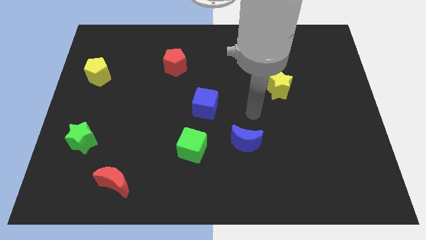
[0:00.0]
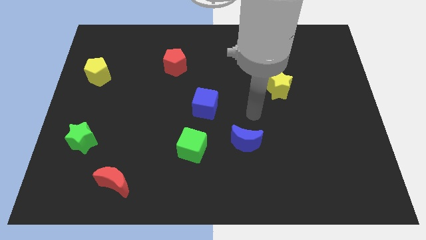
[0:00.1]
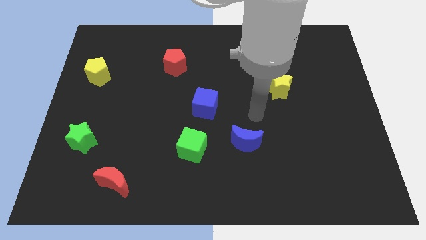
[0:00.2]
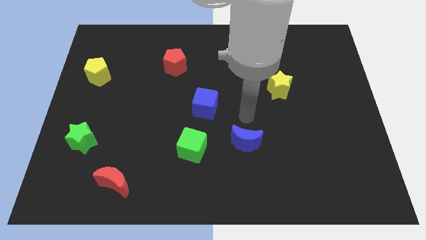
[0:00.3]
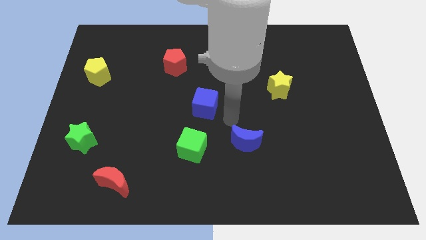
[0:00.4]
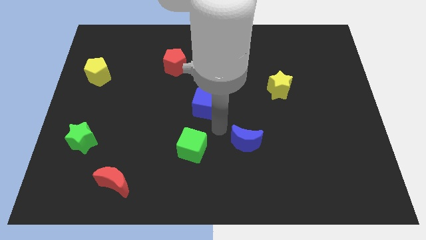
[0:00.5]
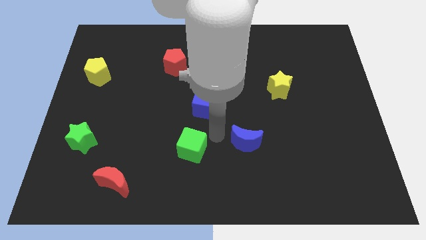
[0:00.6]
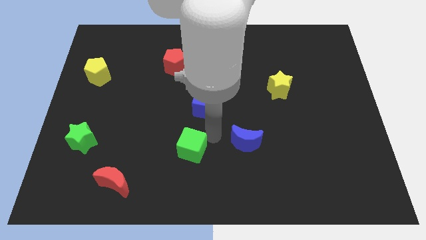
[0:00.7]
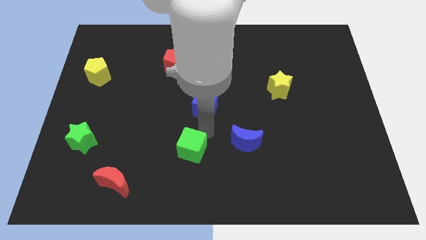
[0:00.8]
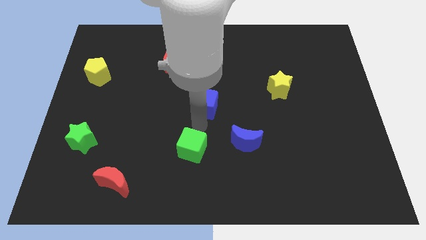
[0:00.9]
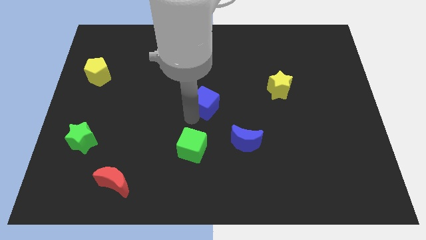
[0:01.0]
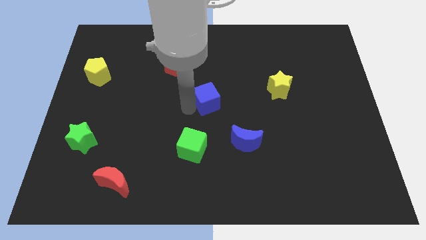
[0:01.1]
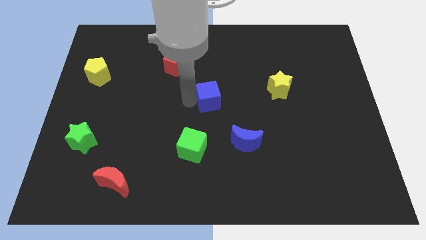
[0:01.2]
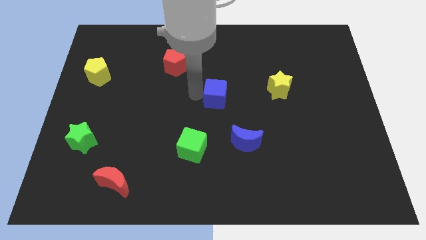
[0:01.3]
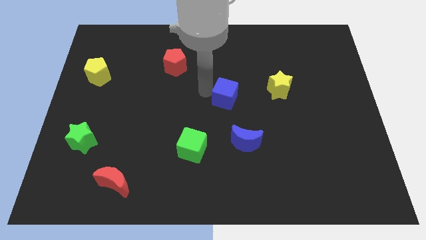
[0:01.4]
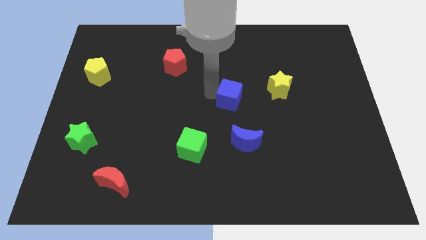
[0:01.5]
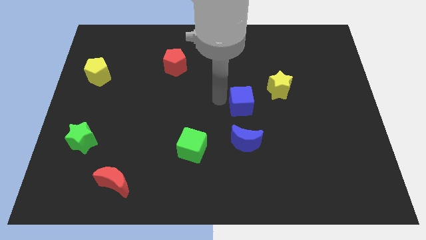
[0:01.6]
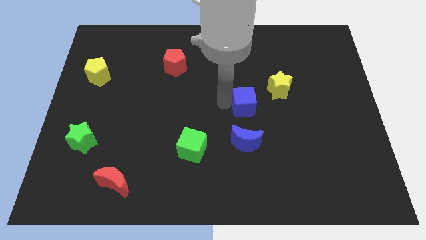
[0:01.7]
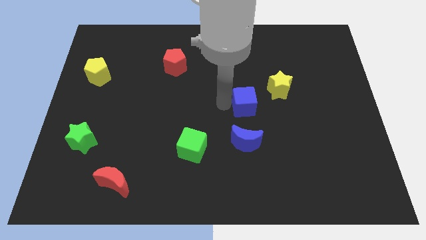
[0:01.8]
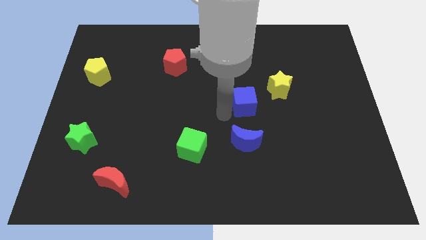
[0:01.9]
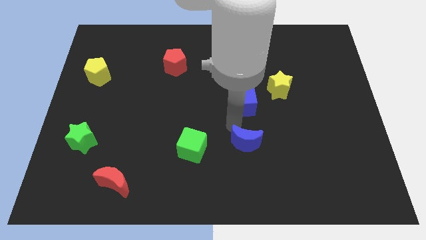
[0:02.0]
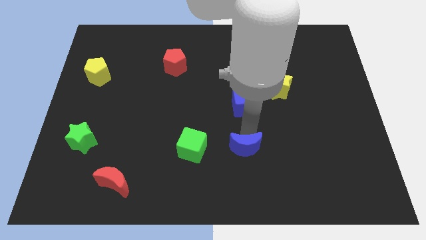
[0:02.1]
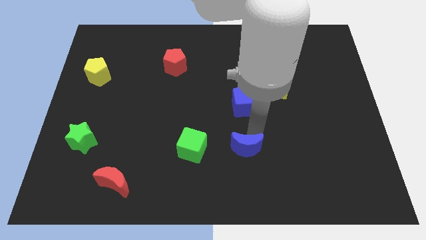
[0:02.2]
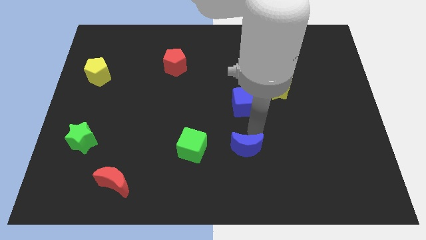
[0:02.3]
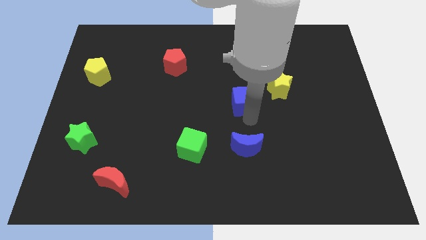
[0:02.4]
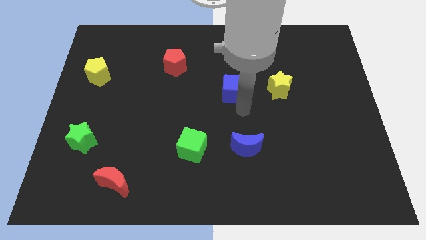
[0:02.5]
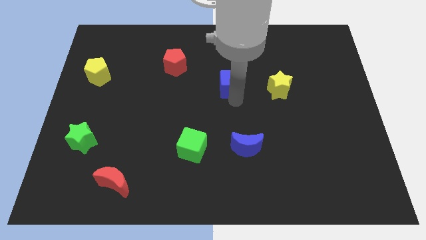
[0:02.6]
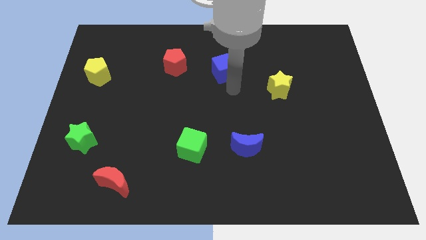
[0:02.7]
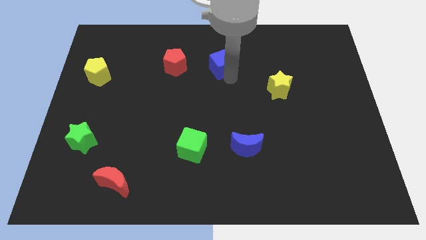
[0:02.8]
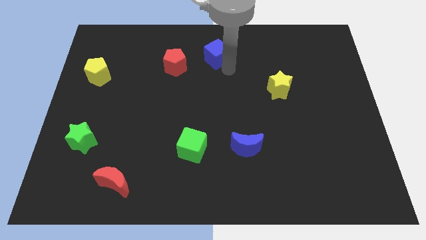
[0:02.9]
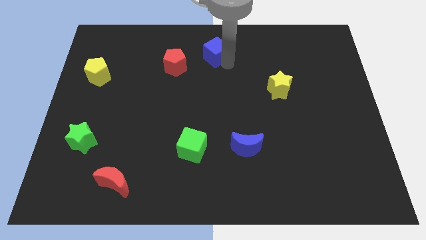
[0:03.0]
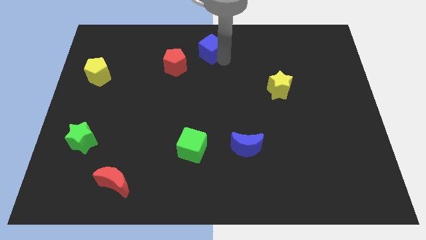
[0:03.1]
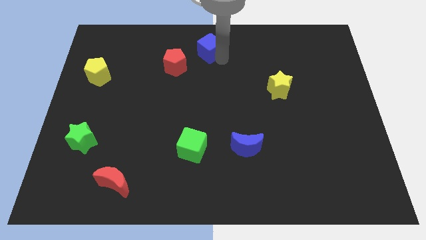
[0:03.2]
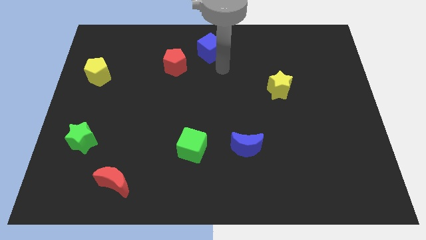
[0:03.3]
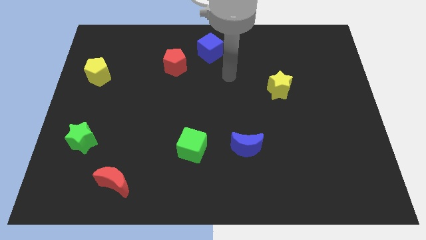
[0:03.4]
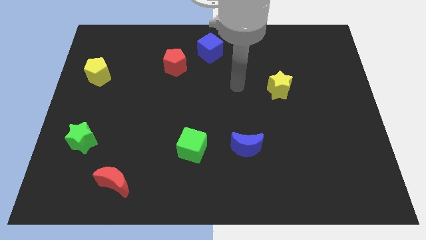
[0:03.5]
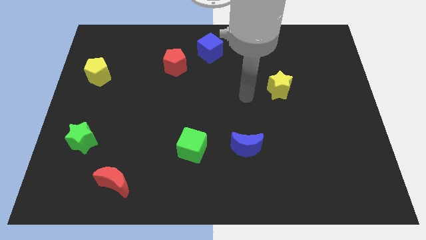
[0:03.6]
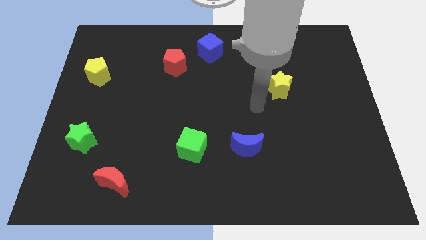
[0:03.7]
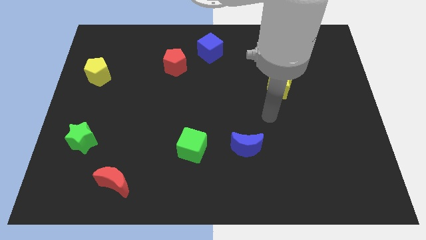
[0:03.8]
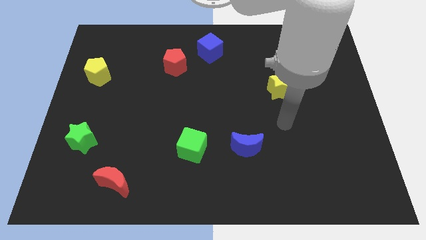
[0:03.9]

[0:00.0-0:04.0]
move the blue cube towards the top center of the board

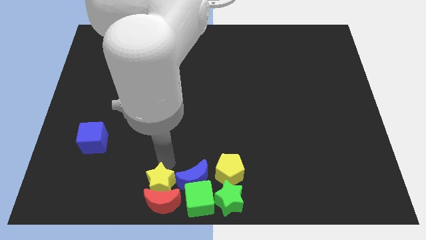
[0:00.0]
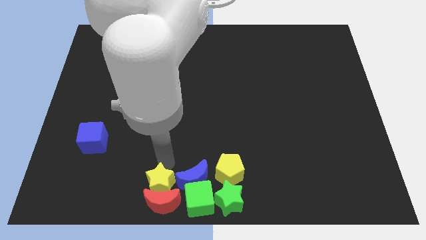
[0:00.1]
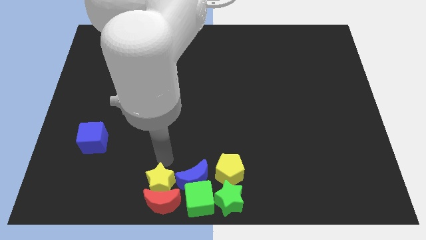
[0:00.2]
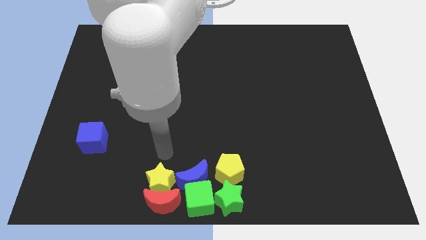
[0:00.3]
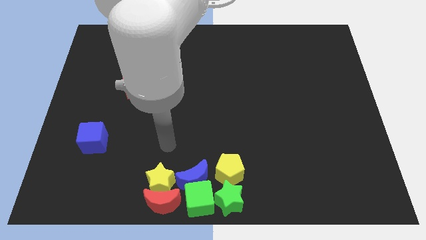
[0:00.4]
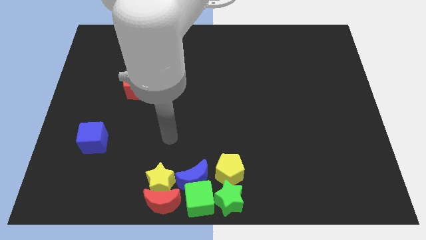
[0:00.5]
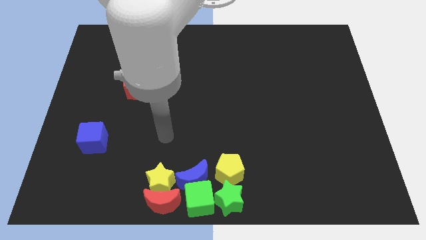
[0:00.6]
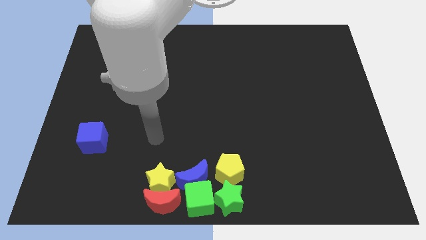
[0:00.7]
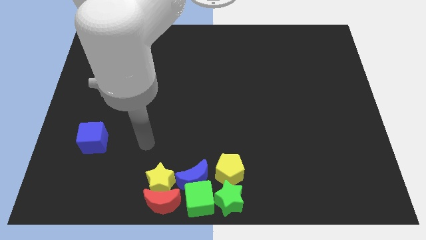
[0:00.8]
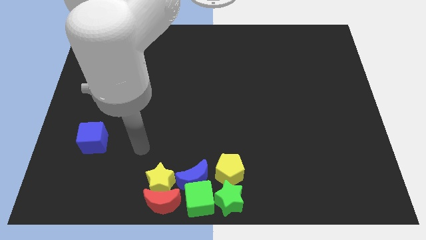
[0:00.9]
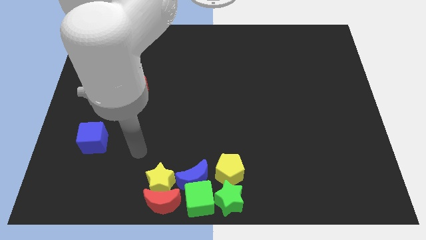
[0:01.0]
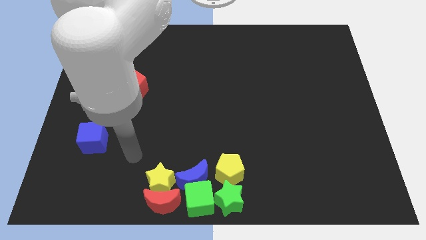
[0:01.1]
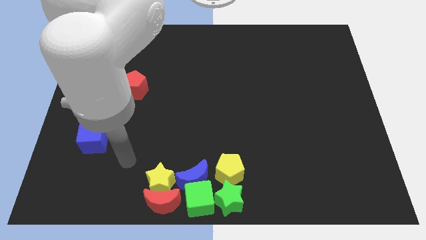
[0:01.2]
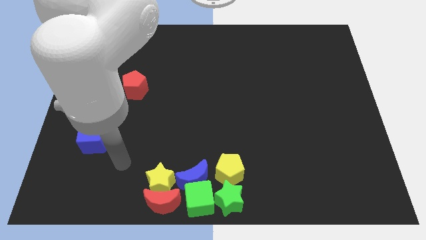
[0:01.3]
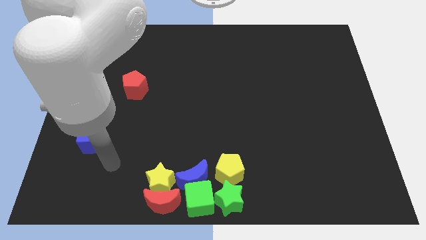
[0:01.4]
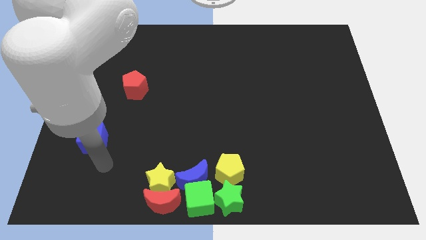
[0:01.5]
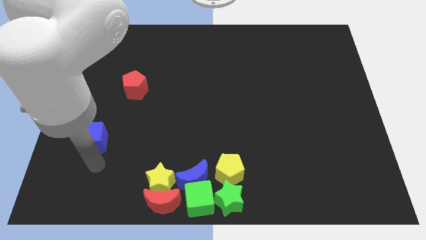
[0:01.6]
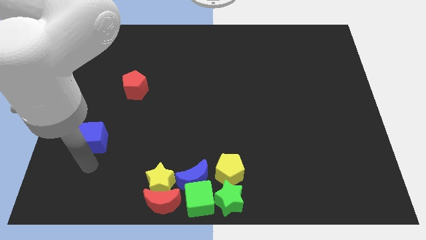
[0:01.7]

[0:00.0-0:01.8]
move near the blue cube

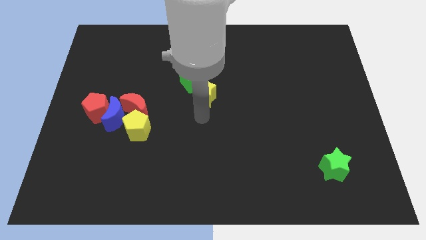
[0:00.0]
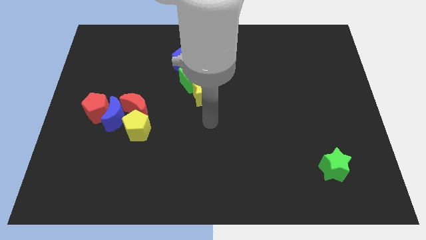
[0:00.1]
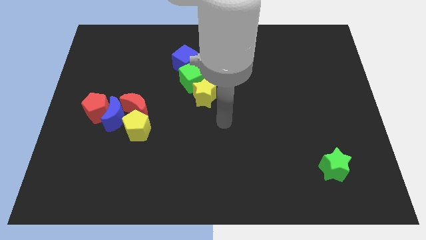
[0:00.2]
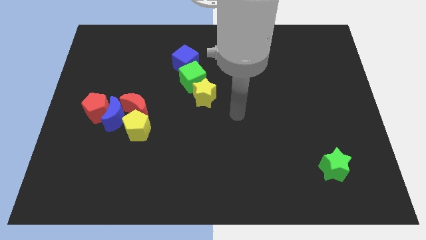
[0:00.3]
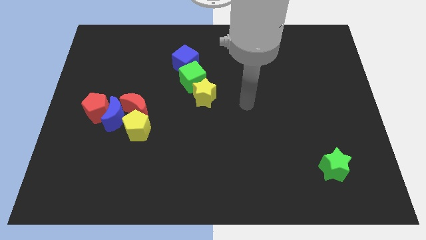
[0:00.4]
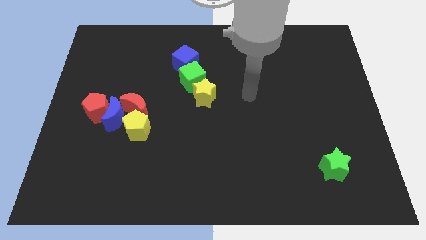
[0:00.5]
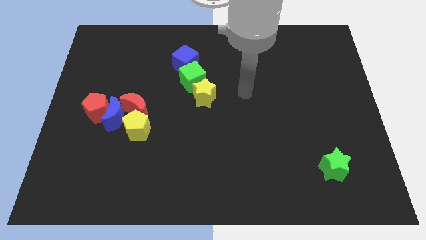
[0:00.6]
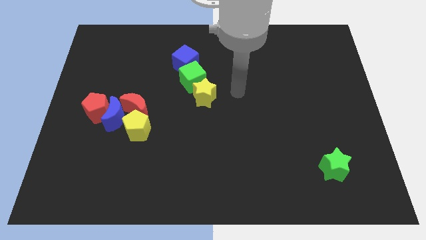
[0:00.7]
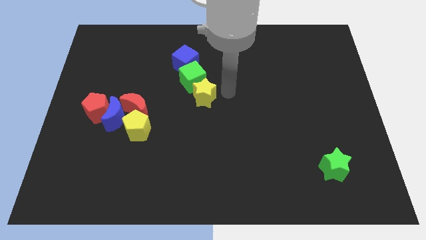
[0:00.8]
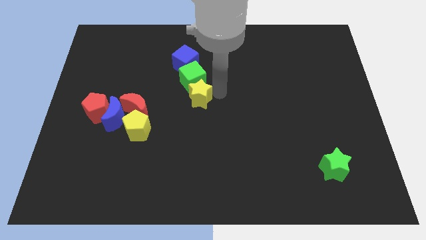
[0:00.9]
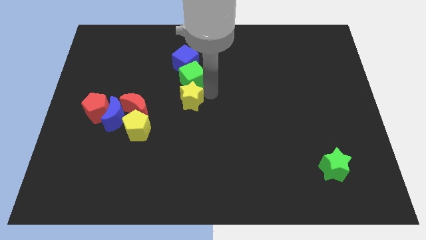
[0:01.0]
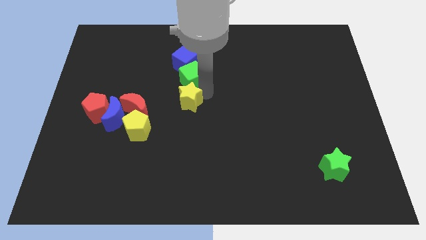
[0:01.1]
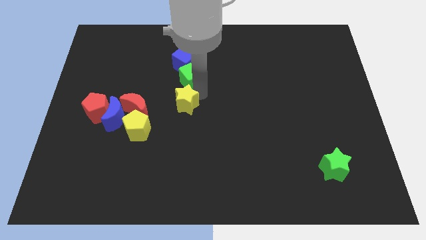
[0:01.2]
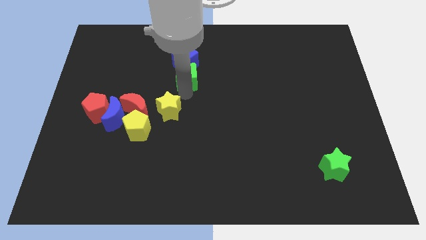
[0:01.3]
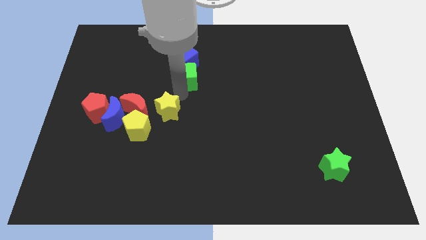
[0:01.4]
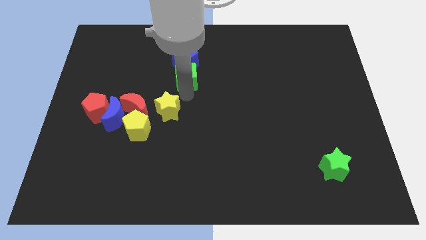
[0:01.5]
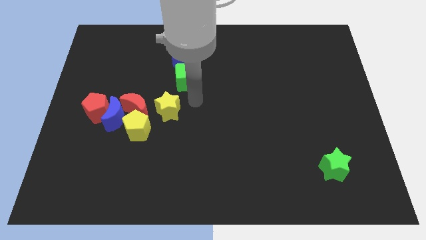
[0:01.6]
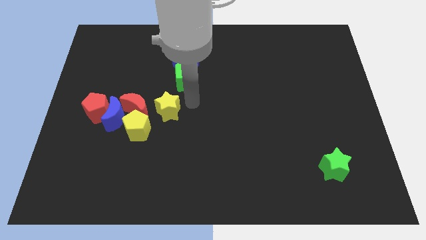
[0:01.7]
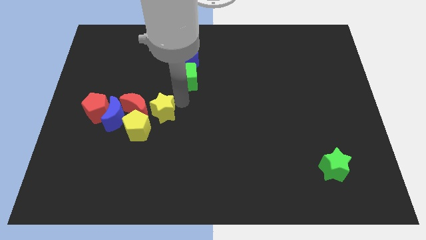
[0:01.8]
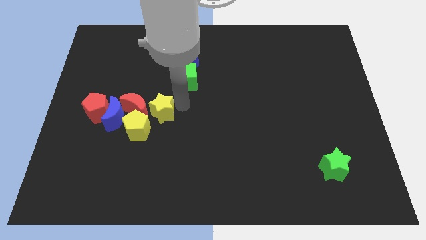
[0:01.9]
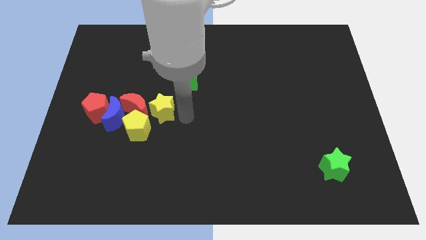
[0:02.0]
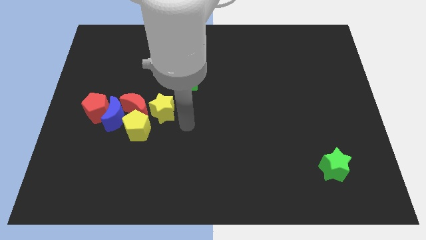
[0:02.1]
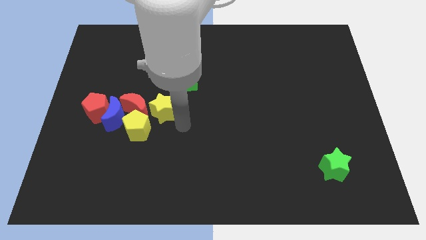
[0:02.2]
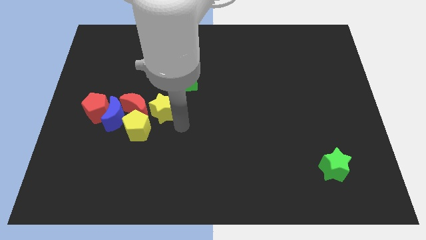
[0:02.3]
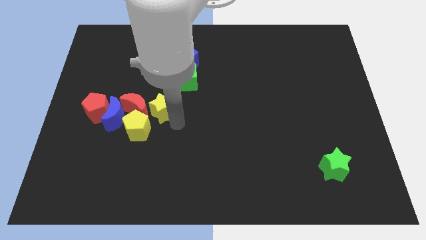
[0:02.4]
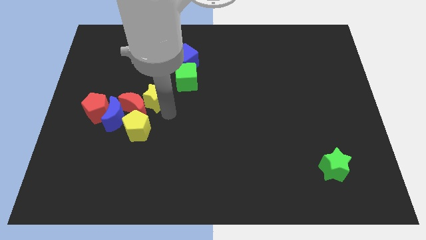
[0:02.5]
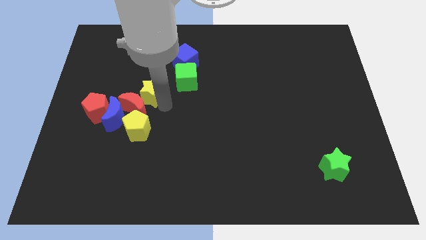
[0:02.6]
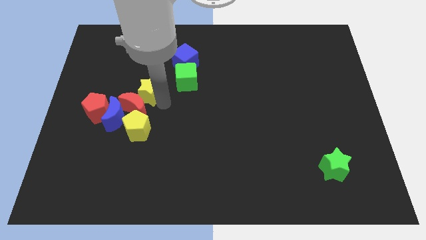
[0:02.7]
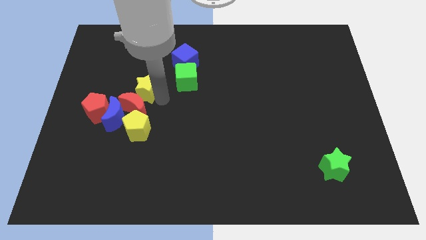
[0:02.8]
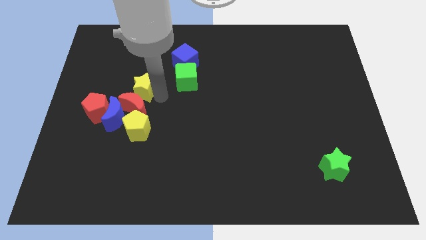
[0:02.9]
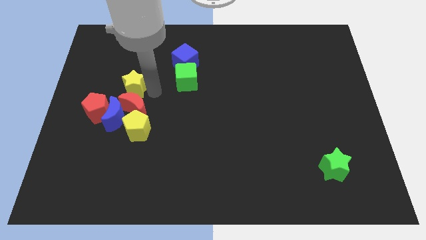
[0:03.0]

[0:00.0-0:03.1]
move the yellow star to the top side of the red moon

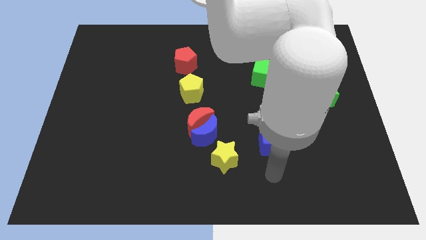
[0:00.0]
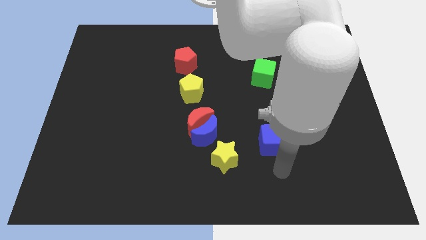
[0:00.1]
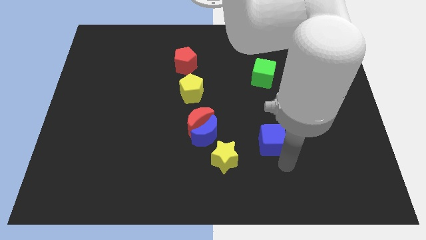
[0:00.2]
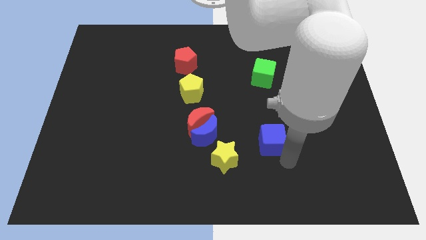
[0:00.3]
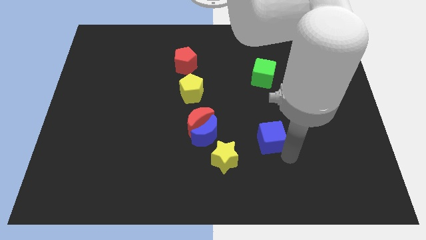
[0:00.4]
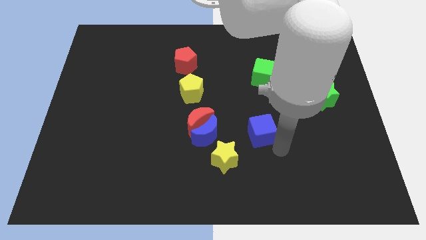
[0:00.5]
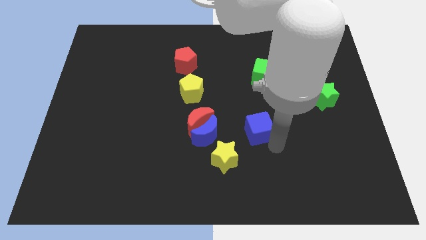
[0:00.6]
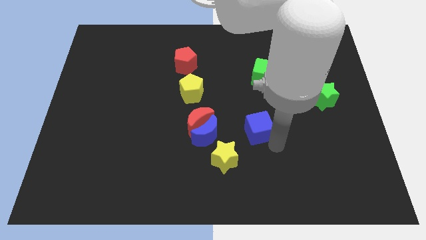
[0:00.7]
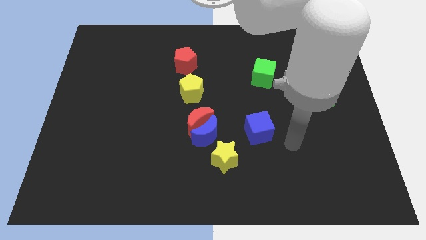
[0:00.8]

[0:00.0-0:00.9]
push the blue cube upward
